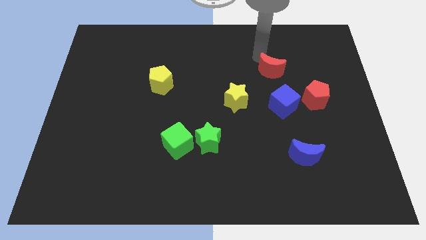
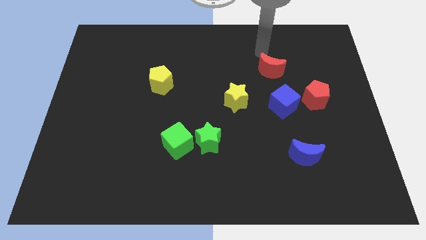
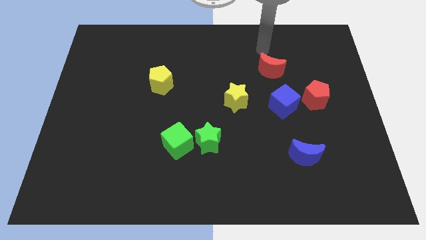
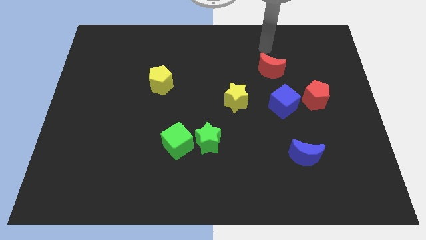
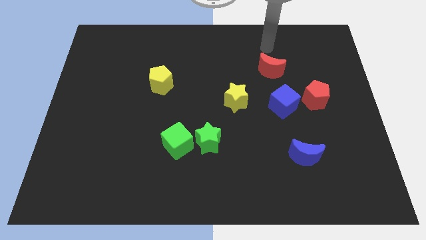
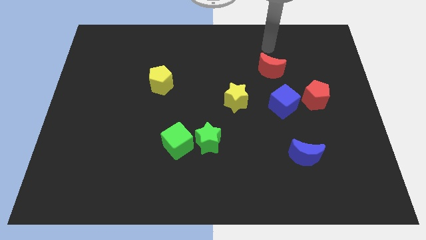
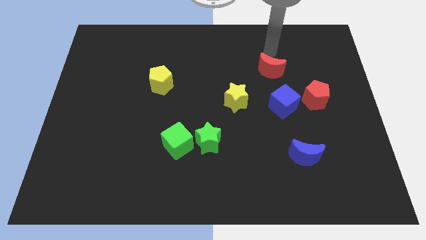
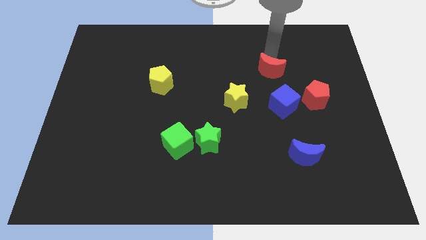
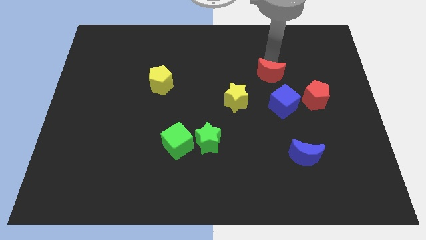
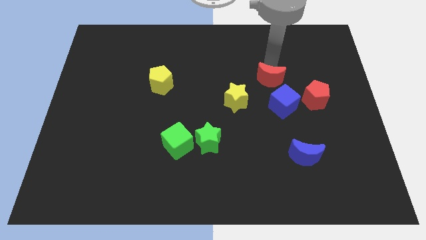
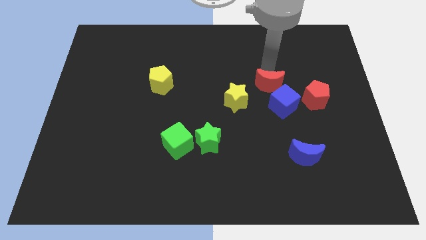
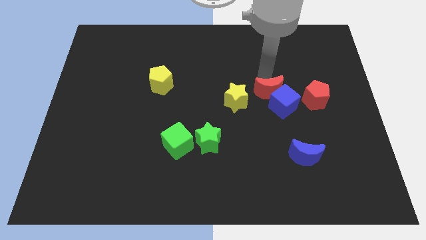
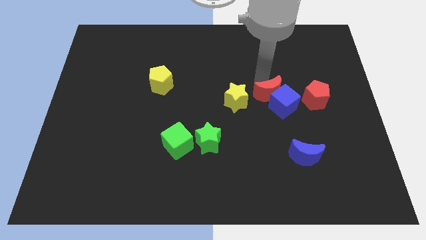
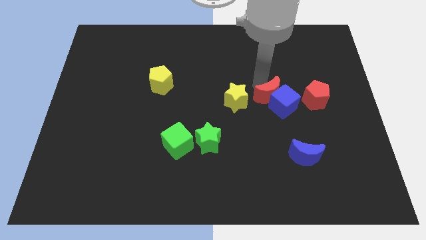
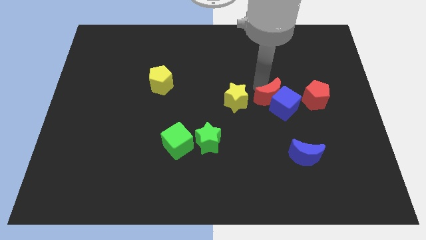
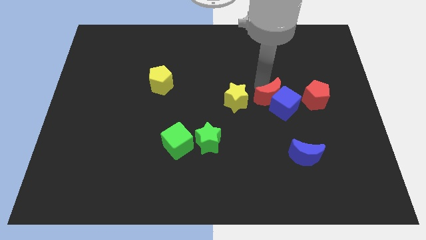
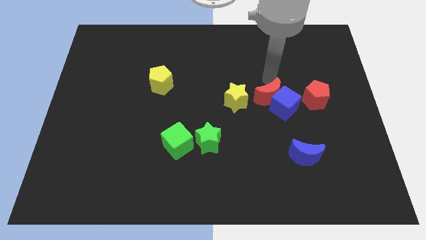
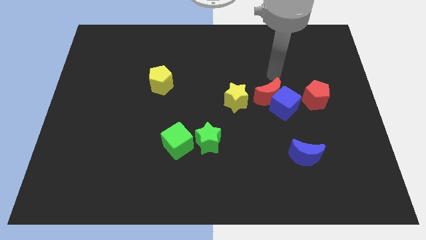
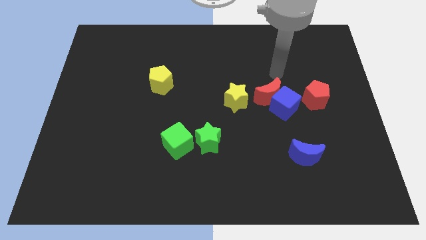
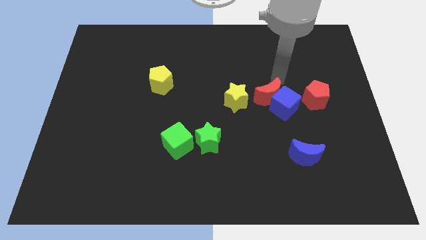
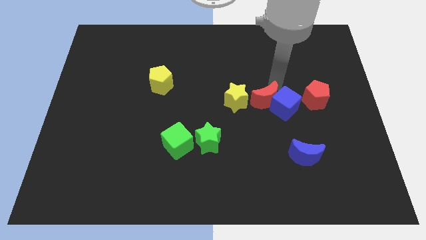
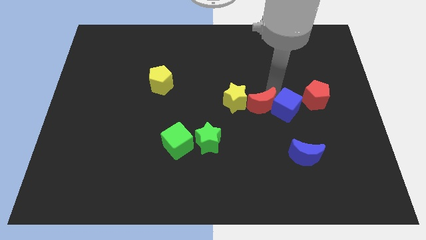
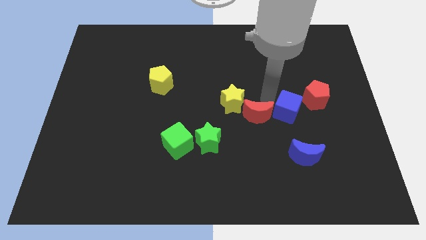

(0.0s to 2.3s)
push the red moon into the blue cube

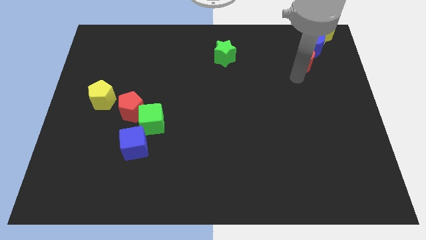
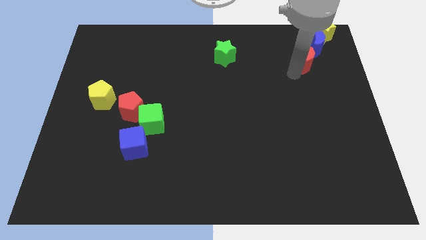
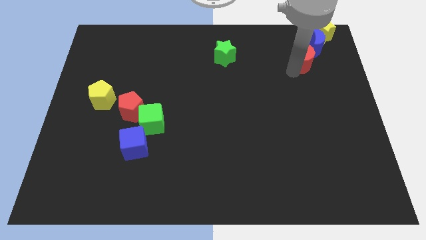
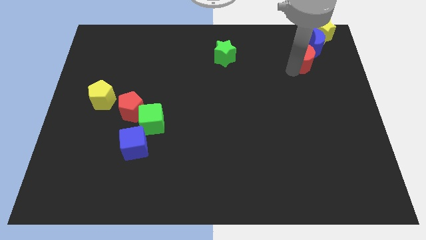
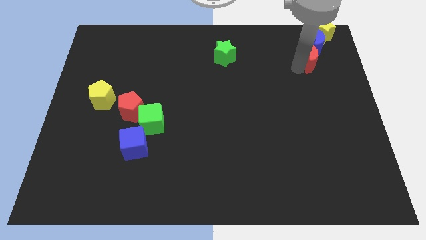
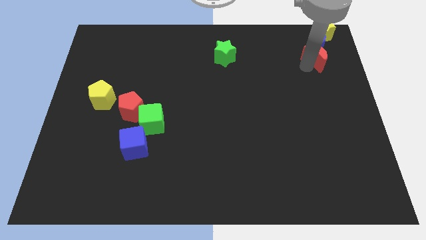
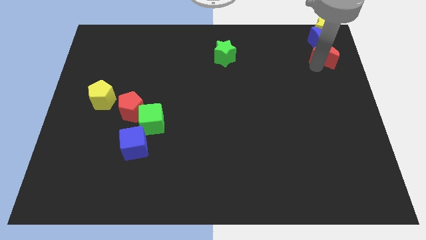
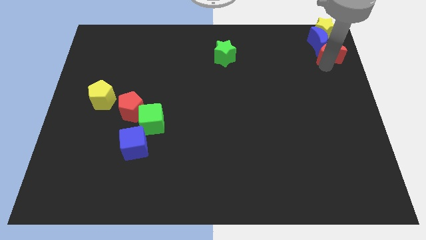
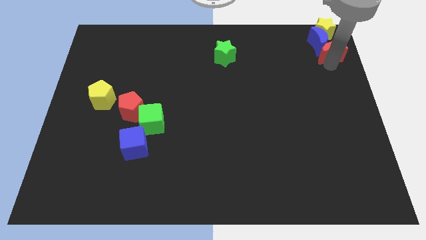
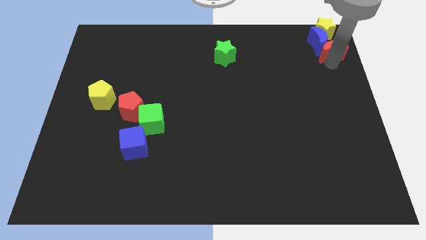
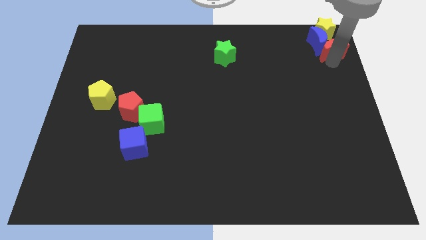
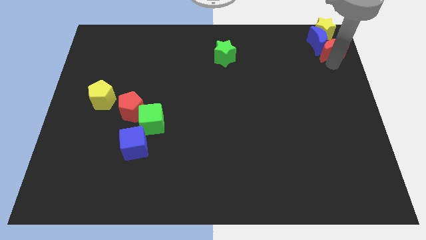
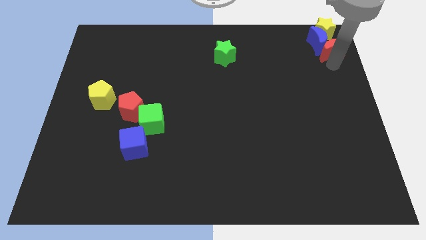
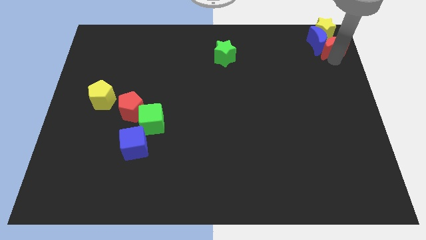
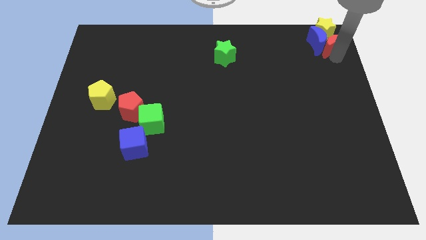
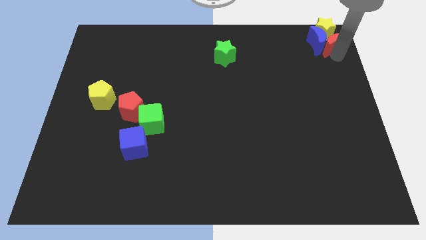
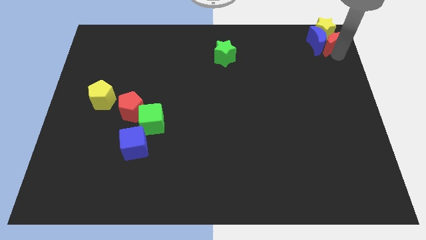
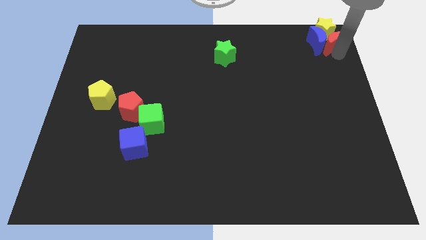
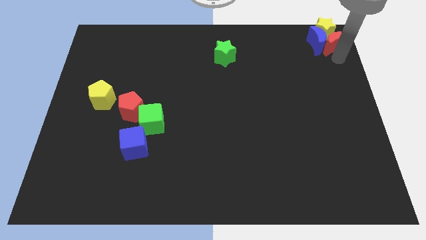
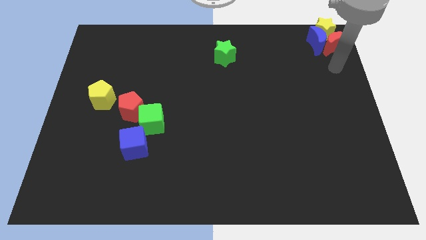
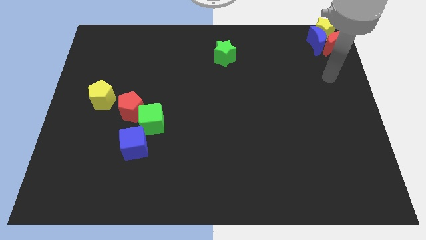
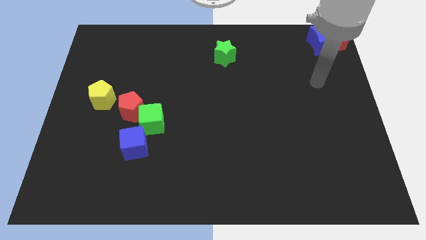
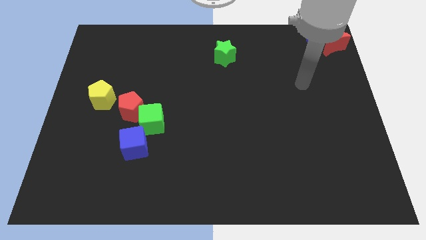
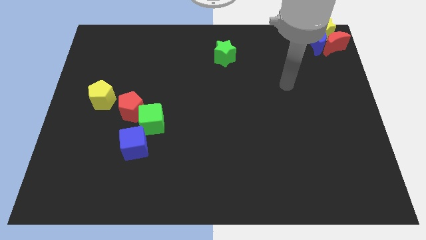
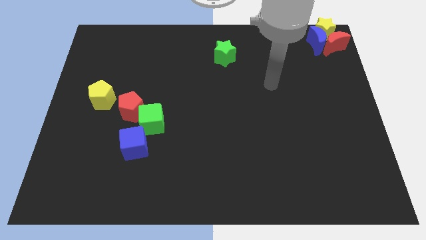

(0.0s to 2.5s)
move the red moon into the group of objects

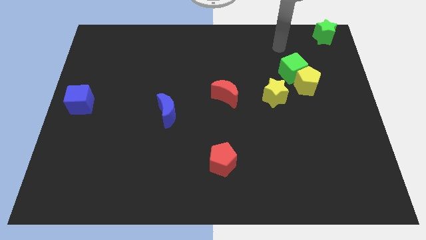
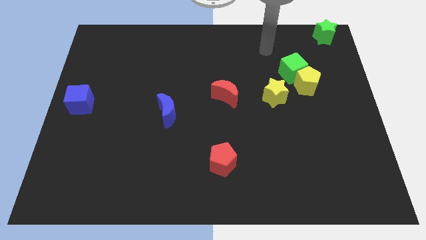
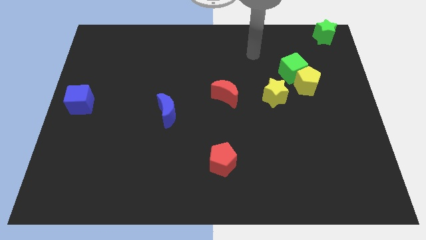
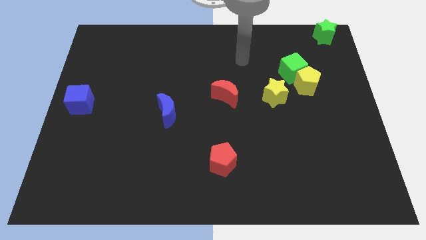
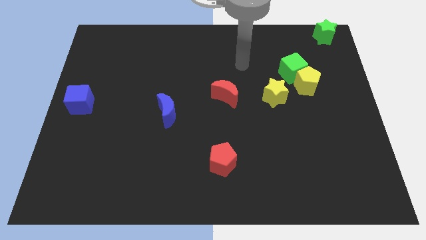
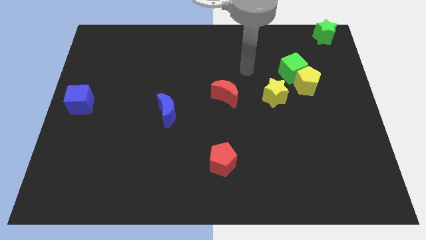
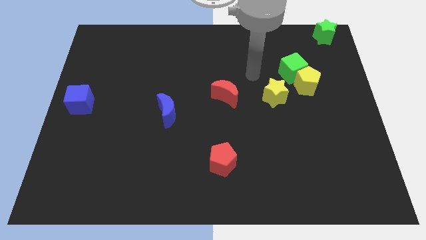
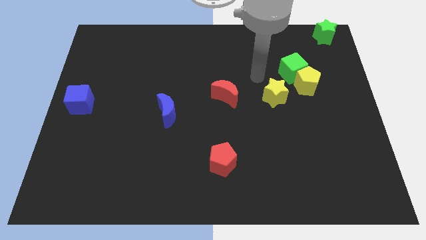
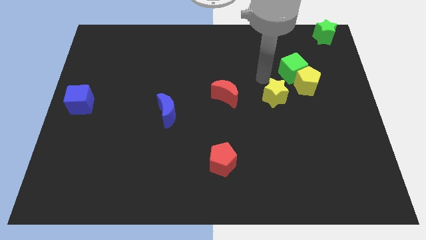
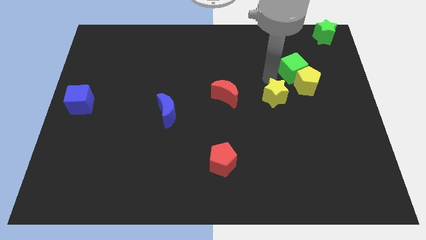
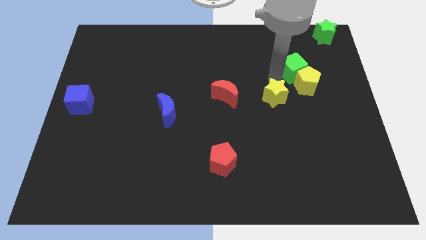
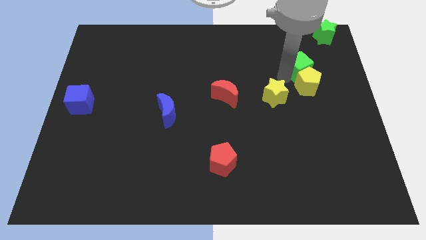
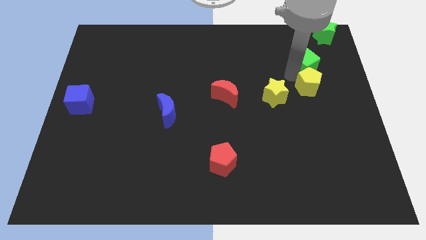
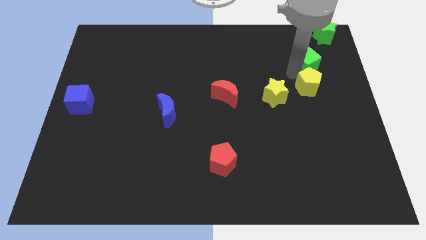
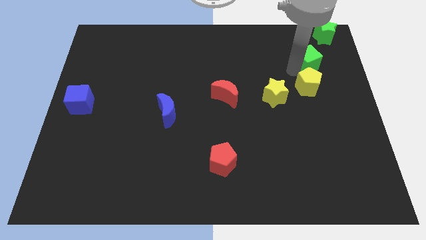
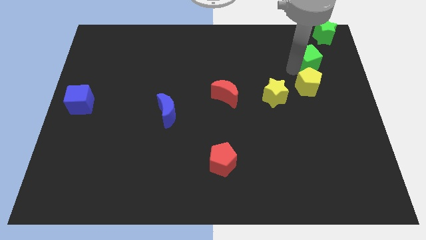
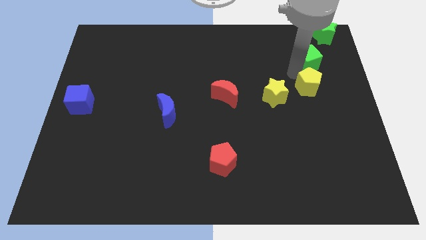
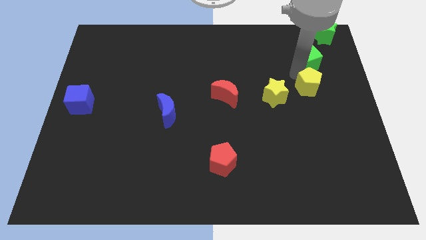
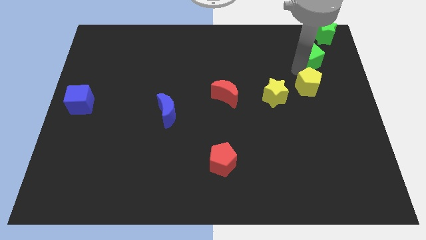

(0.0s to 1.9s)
separate the green cube from the yellow pentagon

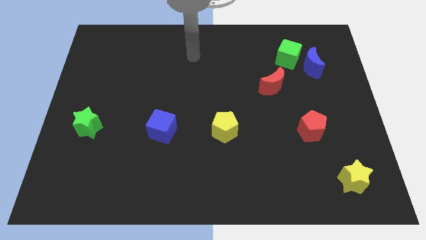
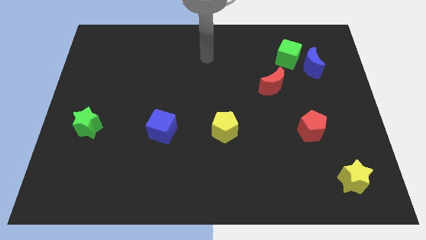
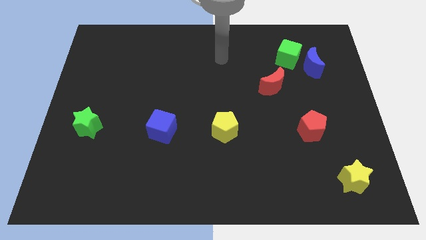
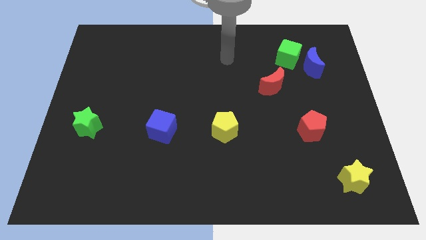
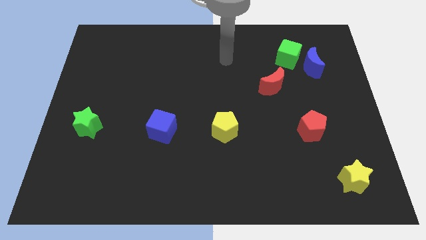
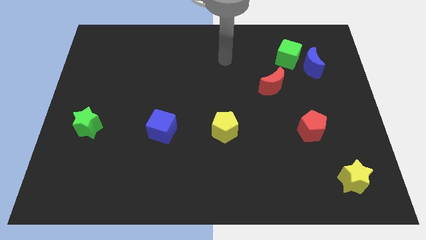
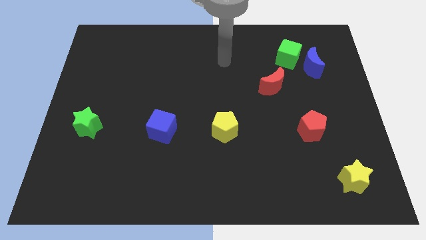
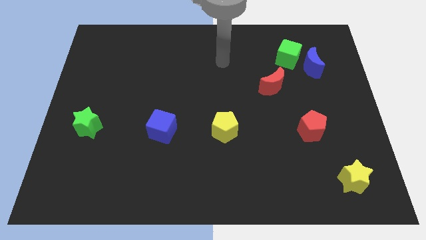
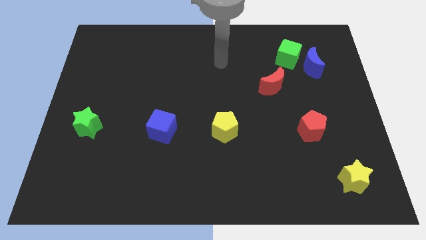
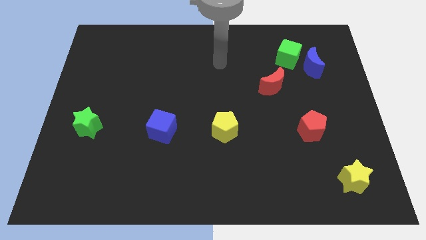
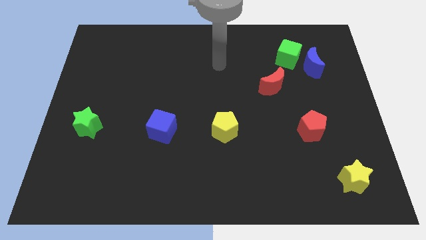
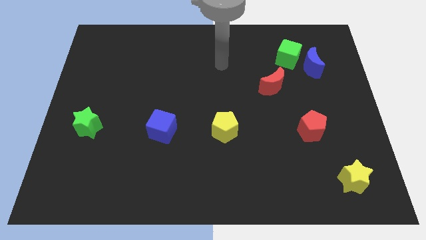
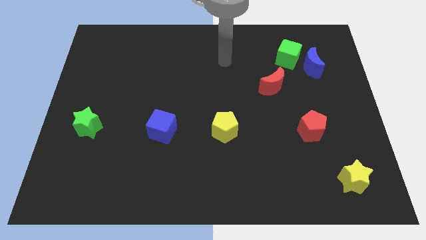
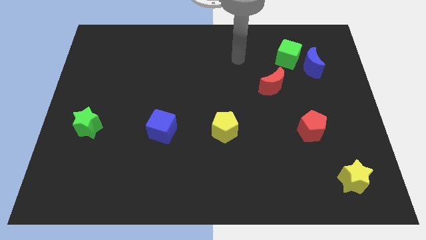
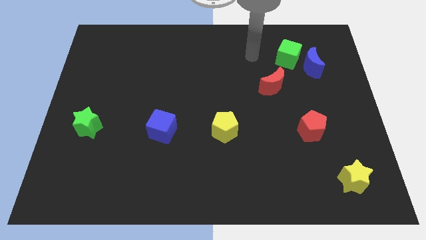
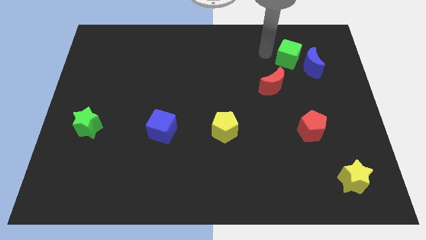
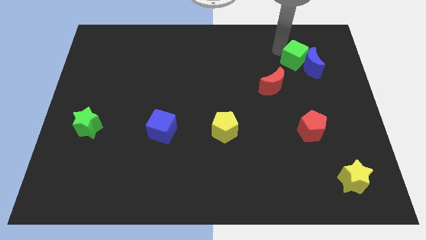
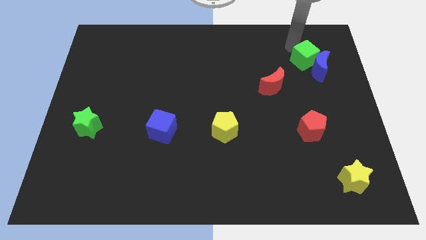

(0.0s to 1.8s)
push the green cube into the blue crescent

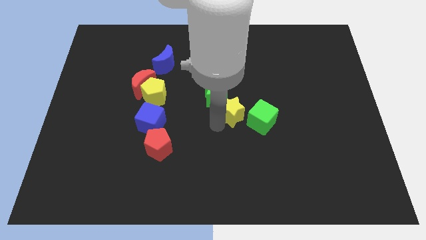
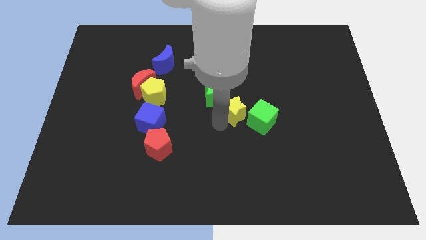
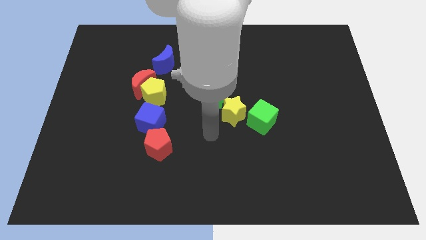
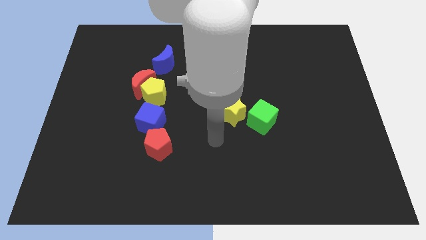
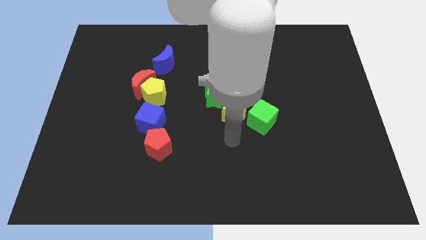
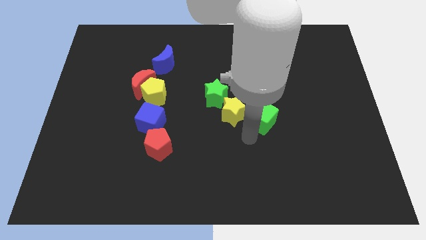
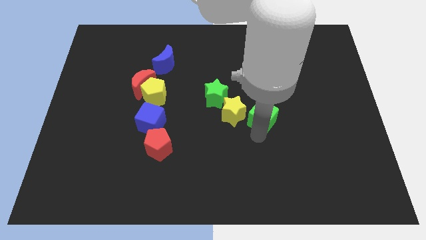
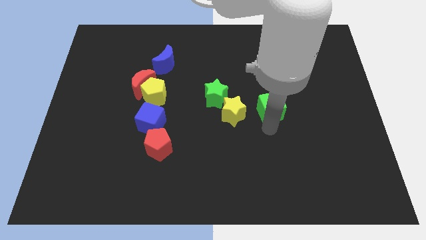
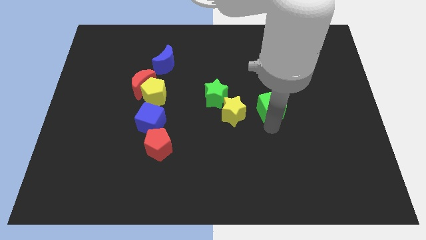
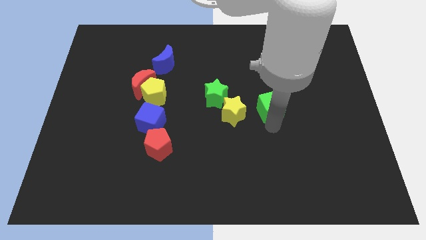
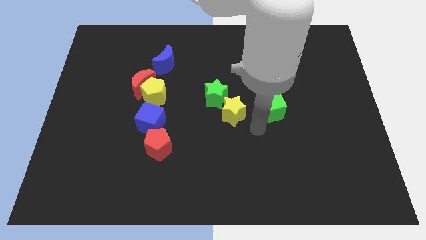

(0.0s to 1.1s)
separate green cube from yellow star
